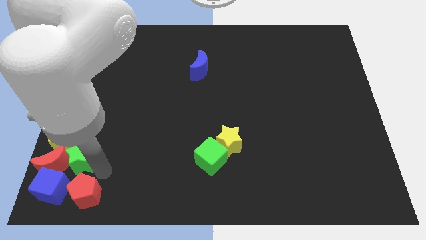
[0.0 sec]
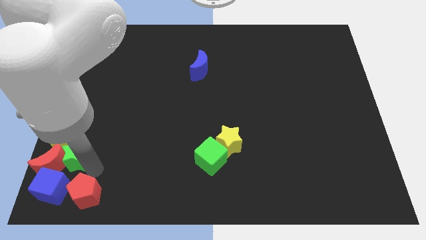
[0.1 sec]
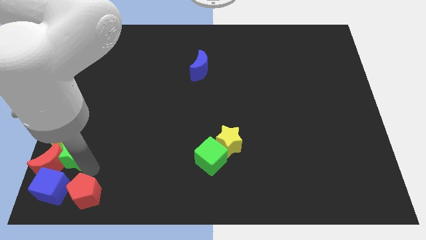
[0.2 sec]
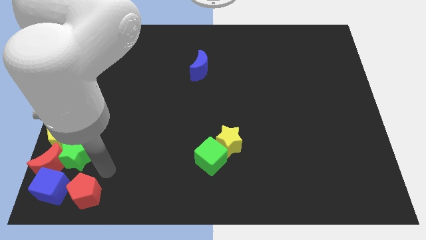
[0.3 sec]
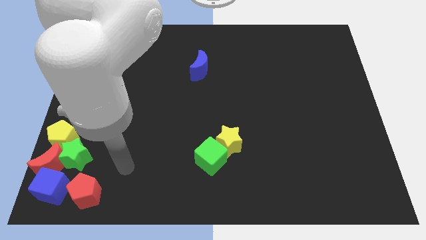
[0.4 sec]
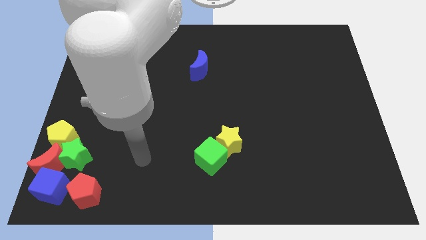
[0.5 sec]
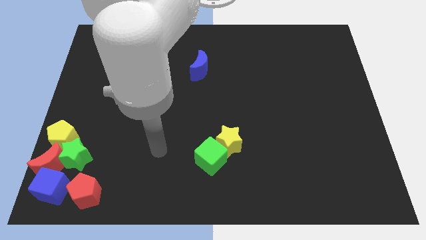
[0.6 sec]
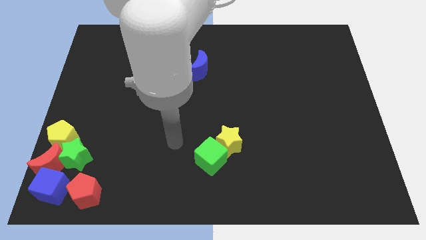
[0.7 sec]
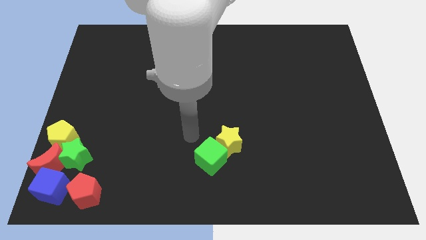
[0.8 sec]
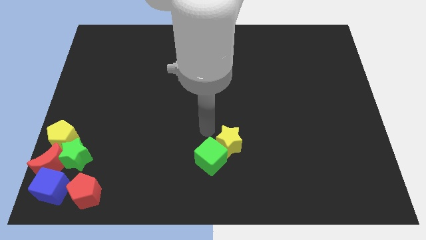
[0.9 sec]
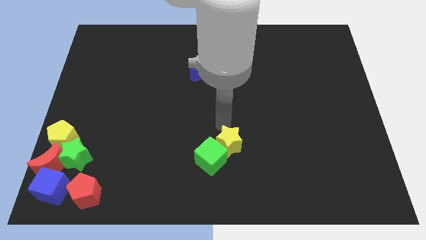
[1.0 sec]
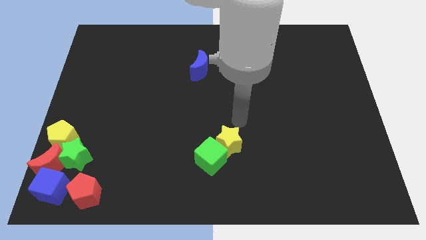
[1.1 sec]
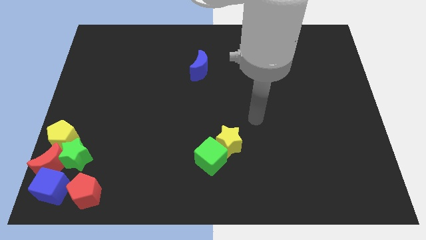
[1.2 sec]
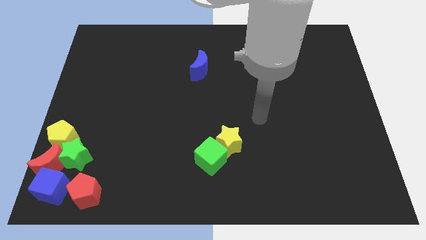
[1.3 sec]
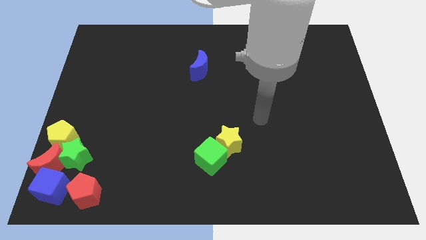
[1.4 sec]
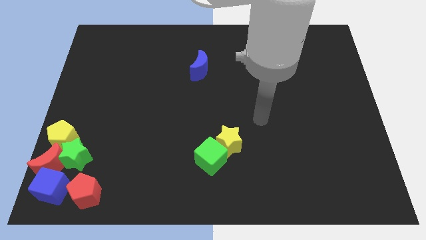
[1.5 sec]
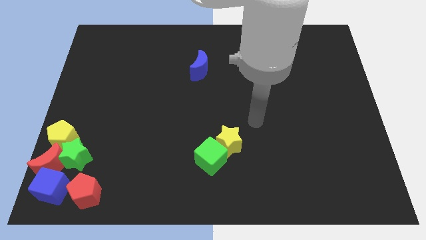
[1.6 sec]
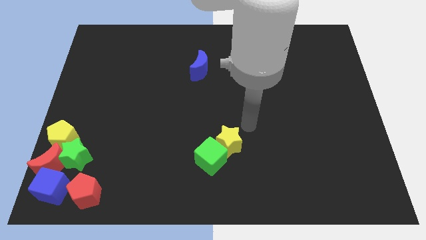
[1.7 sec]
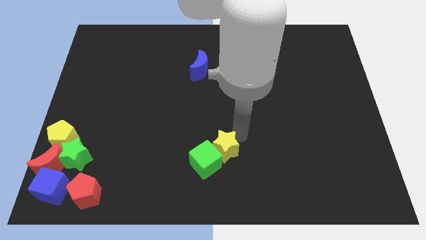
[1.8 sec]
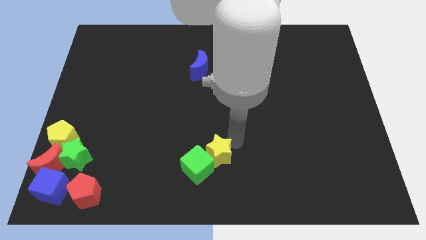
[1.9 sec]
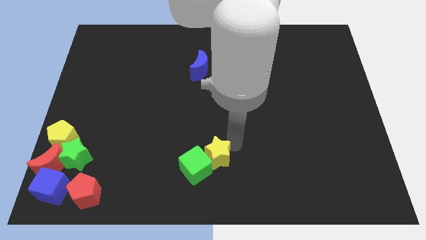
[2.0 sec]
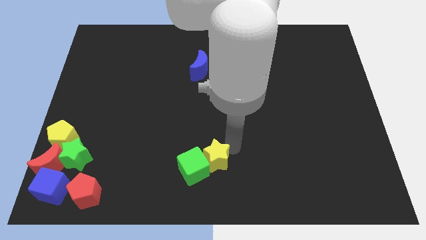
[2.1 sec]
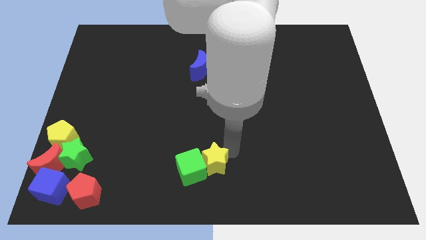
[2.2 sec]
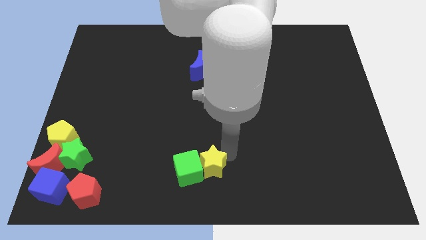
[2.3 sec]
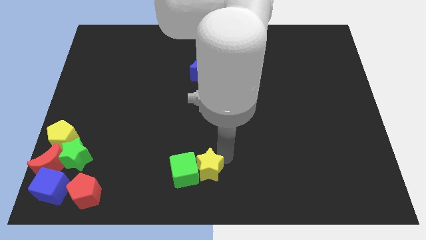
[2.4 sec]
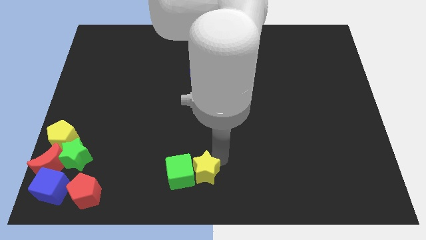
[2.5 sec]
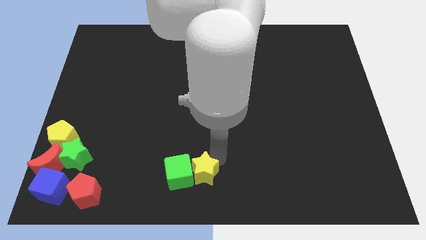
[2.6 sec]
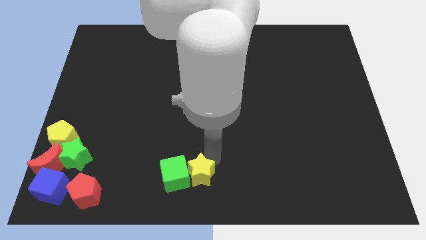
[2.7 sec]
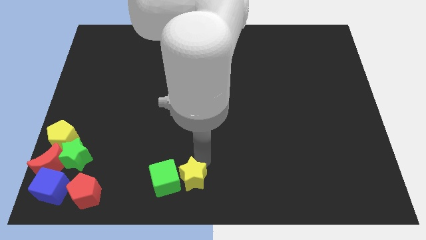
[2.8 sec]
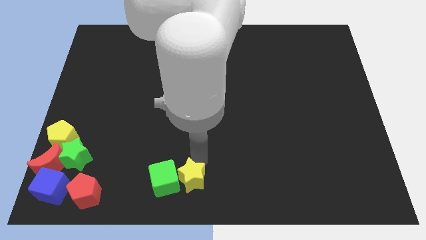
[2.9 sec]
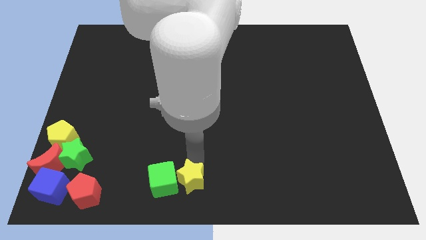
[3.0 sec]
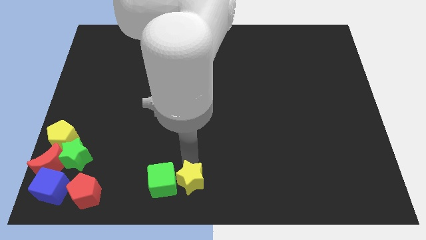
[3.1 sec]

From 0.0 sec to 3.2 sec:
move yellow star to the bottom left

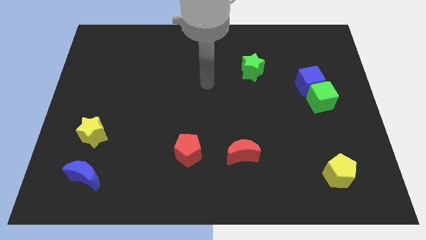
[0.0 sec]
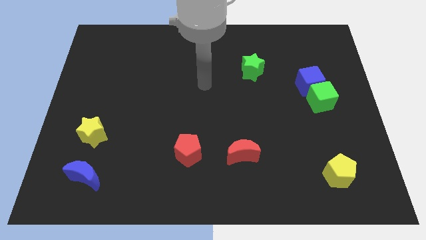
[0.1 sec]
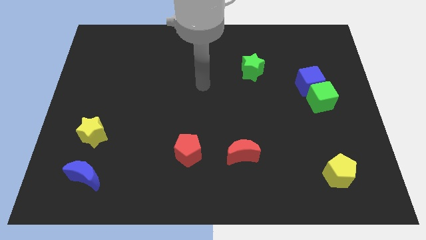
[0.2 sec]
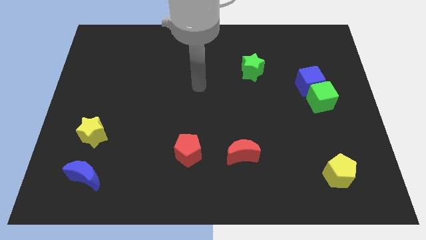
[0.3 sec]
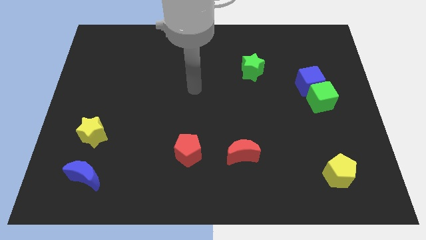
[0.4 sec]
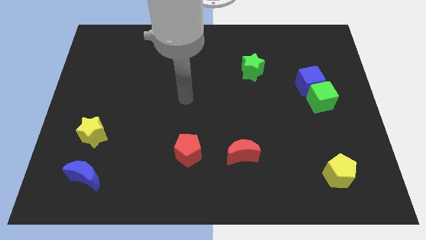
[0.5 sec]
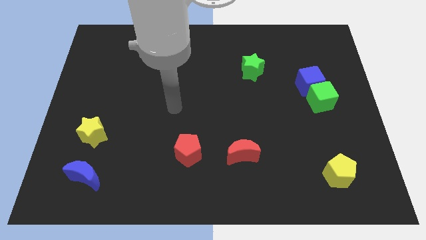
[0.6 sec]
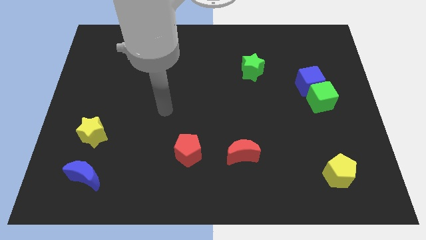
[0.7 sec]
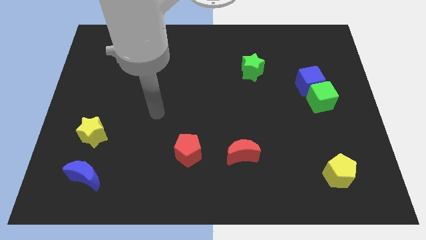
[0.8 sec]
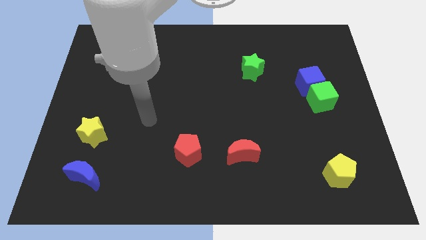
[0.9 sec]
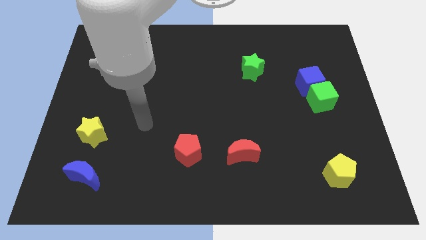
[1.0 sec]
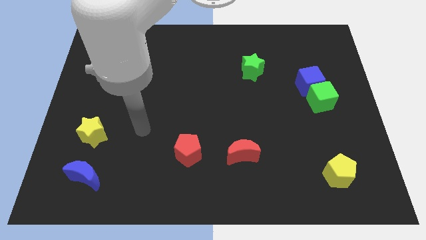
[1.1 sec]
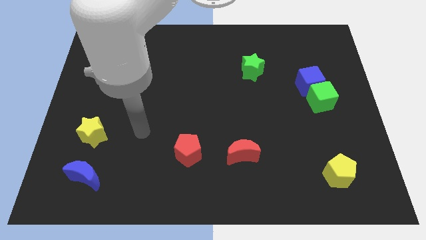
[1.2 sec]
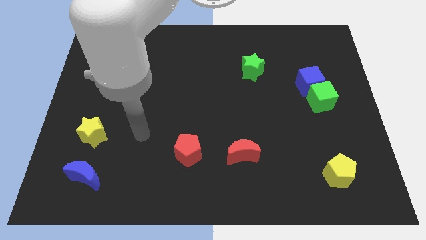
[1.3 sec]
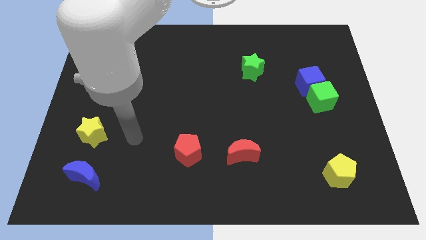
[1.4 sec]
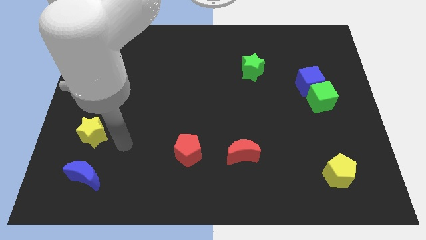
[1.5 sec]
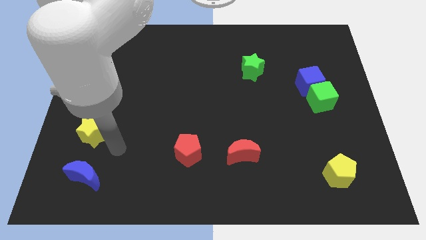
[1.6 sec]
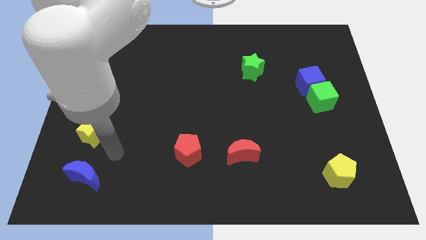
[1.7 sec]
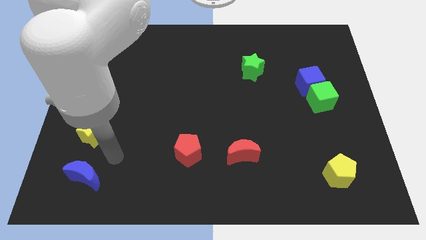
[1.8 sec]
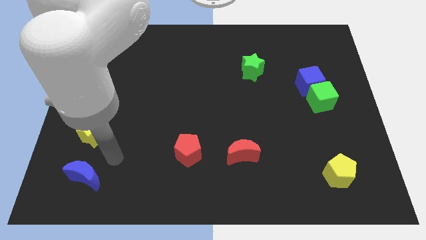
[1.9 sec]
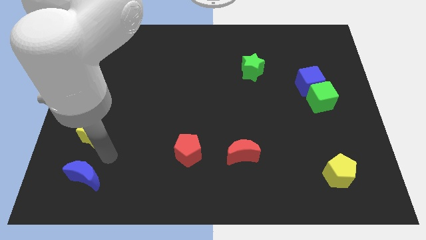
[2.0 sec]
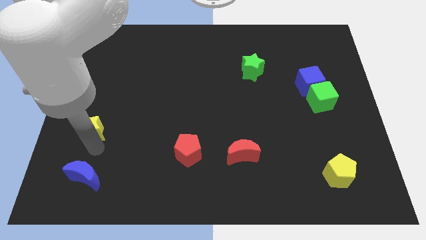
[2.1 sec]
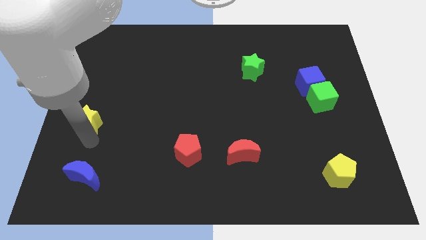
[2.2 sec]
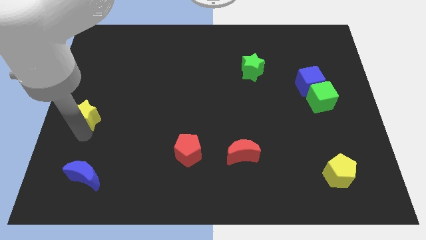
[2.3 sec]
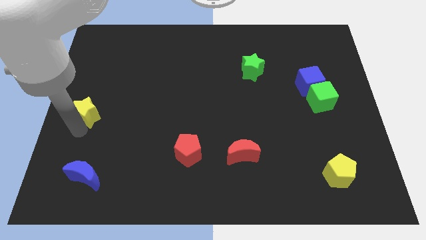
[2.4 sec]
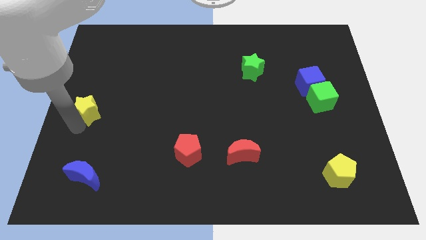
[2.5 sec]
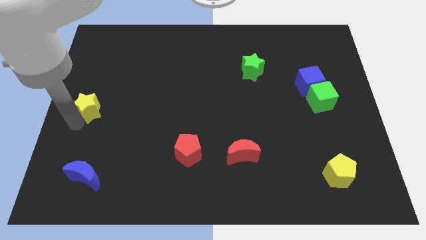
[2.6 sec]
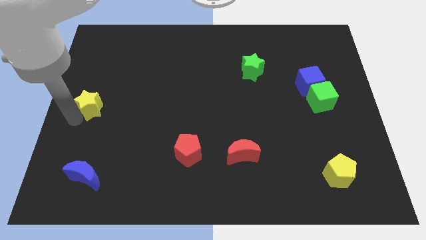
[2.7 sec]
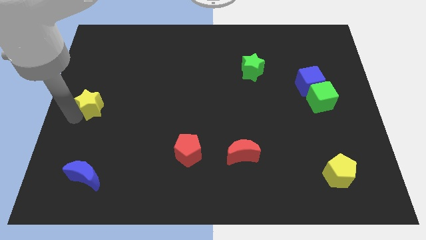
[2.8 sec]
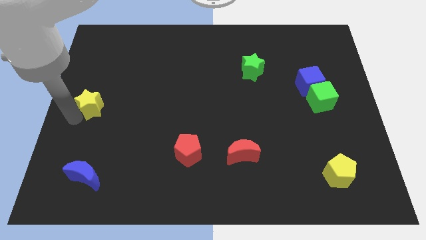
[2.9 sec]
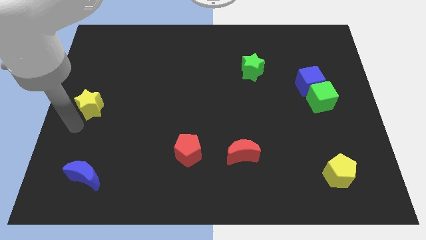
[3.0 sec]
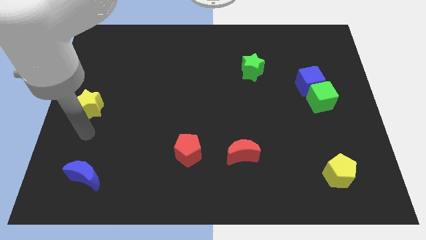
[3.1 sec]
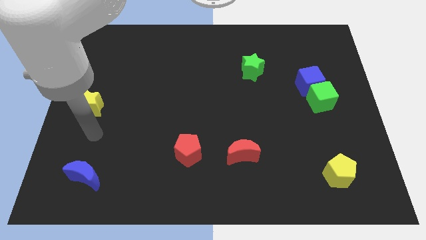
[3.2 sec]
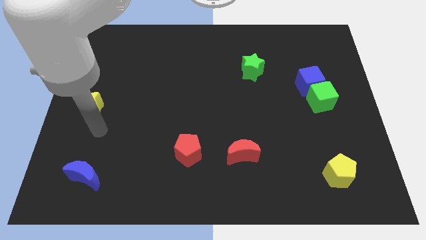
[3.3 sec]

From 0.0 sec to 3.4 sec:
move the yellow star upwards

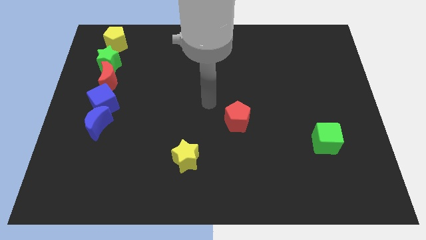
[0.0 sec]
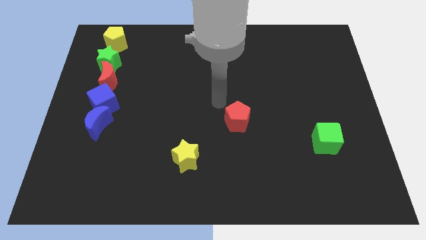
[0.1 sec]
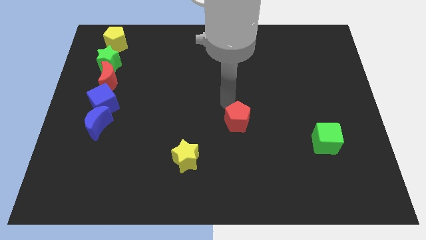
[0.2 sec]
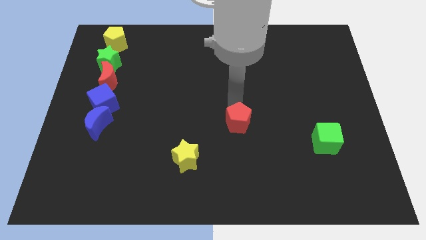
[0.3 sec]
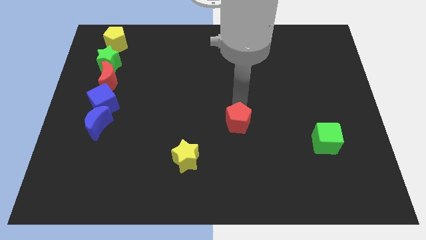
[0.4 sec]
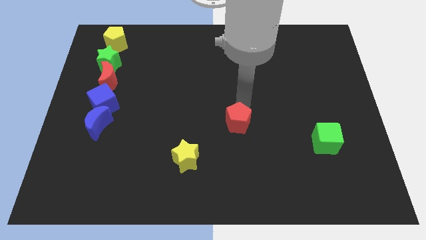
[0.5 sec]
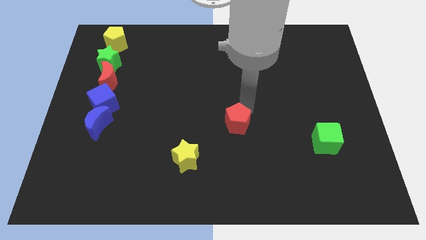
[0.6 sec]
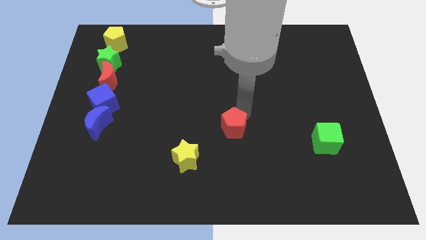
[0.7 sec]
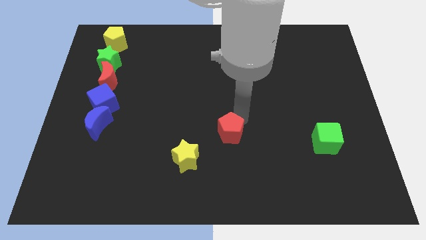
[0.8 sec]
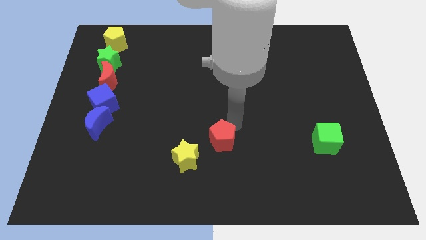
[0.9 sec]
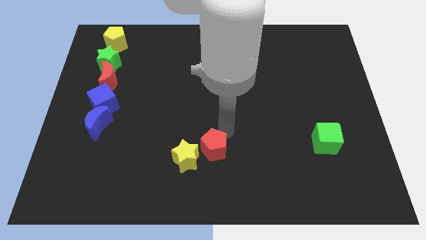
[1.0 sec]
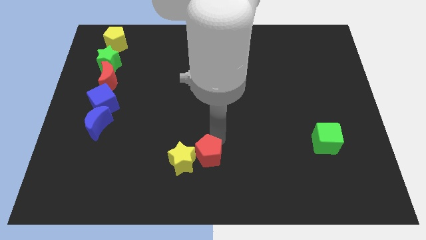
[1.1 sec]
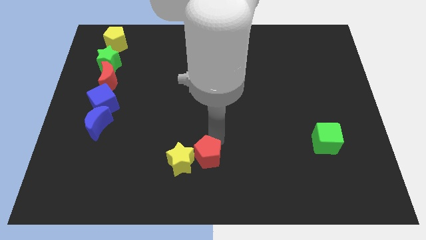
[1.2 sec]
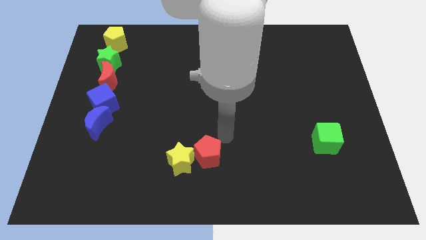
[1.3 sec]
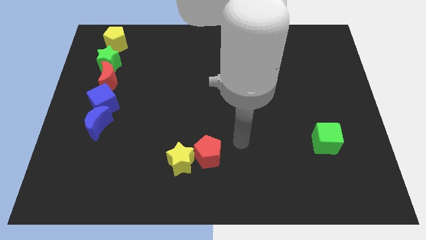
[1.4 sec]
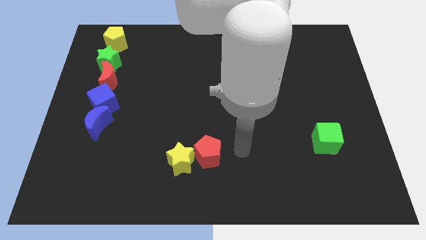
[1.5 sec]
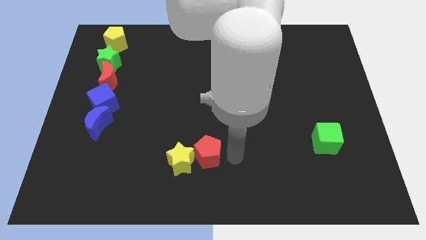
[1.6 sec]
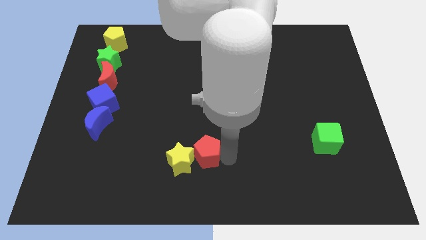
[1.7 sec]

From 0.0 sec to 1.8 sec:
move the red pentagon into the yellow star

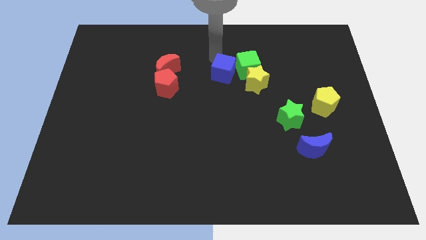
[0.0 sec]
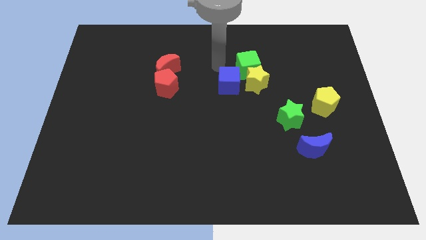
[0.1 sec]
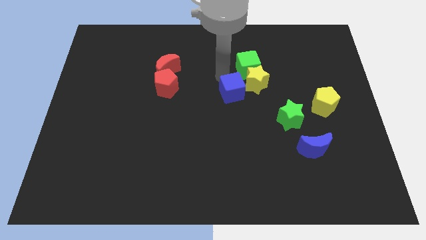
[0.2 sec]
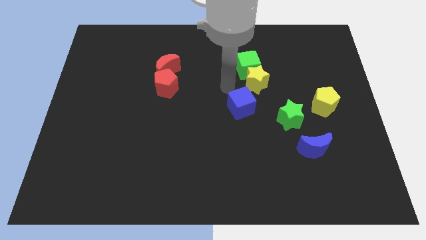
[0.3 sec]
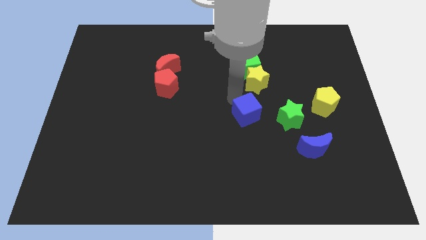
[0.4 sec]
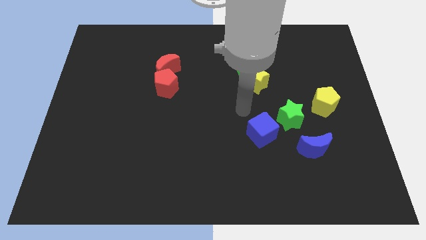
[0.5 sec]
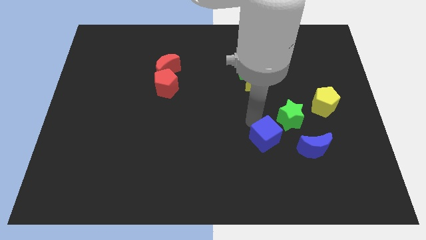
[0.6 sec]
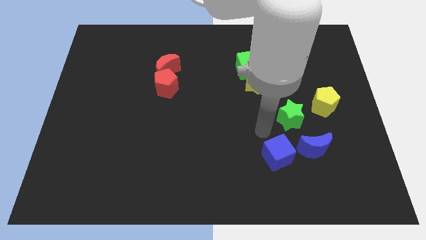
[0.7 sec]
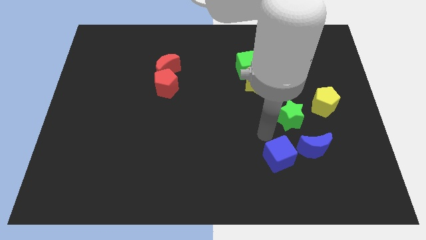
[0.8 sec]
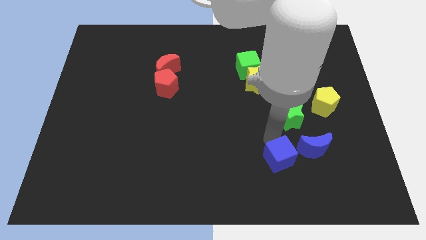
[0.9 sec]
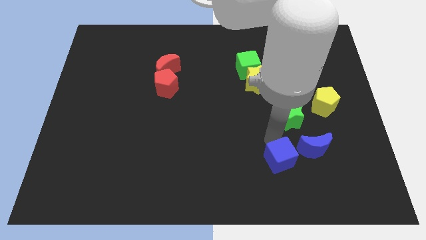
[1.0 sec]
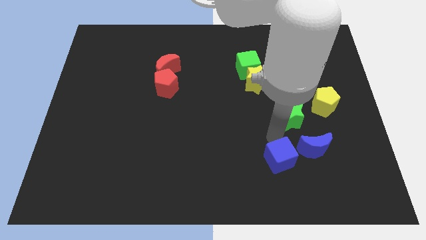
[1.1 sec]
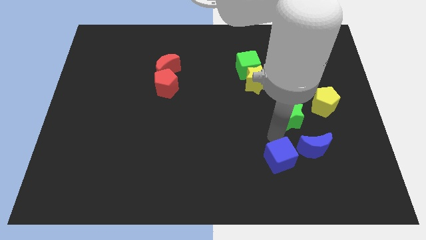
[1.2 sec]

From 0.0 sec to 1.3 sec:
push the blue cube near to the blue crescent
